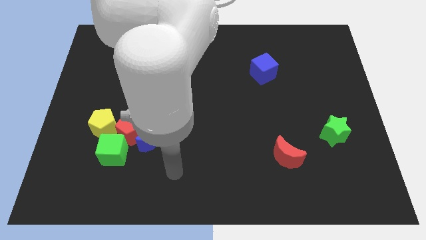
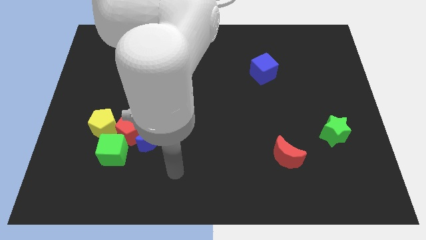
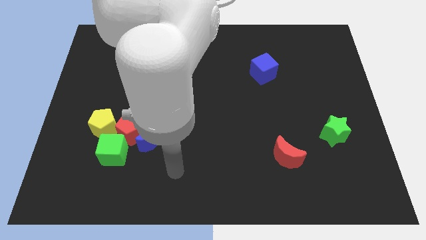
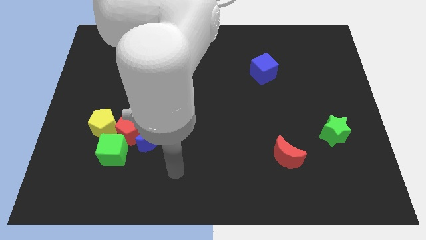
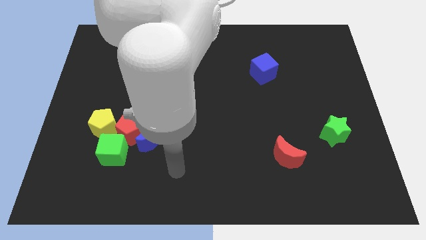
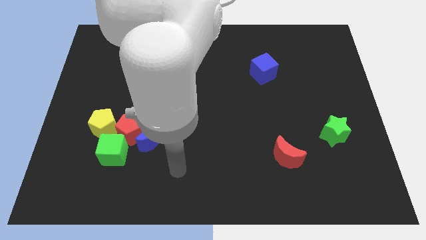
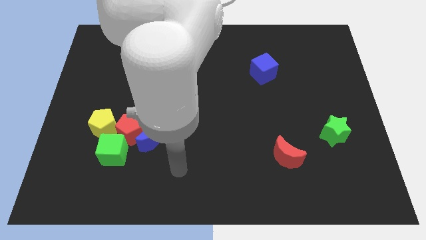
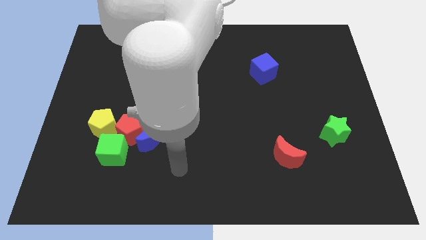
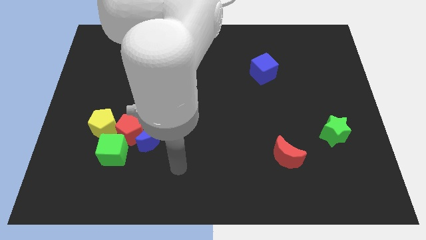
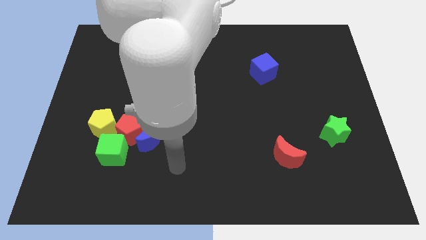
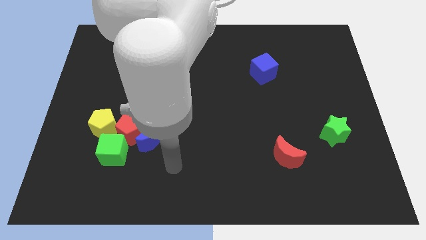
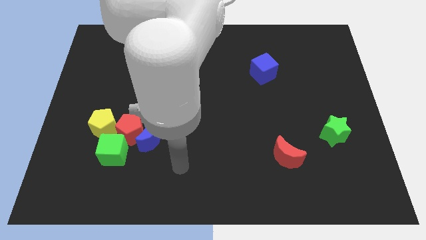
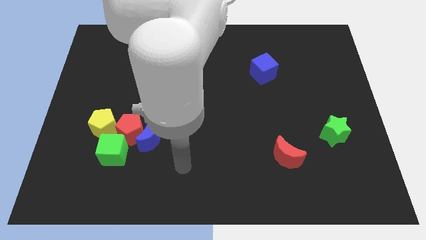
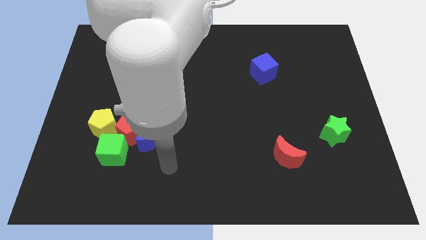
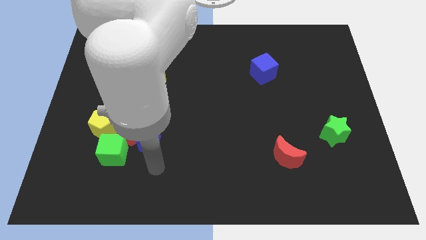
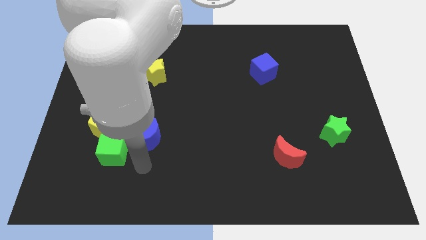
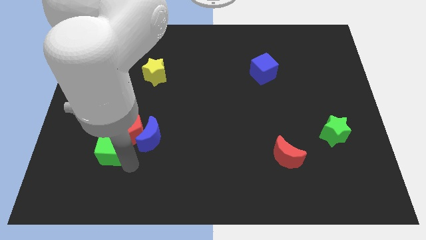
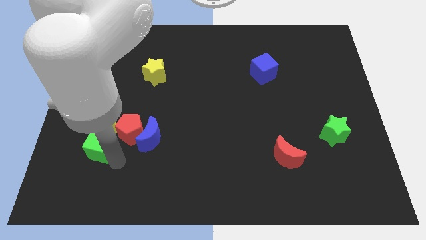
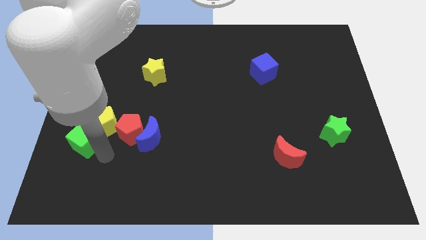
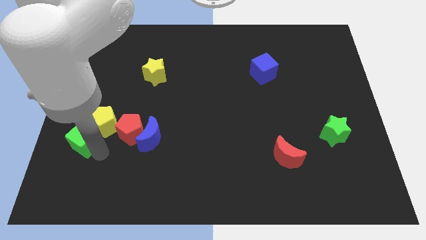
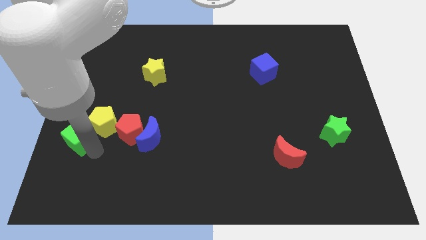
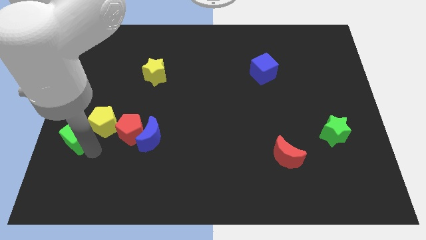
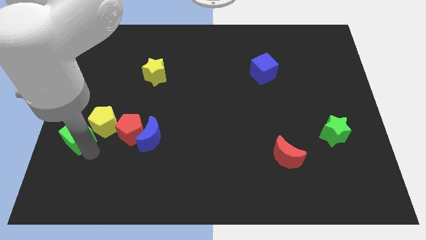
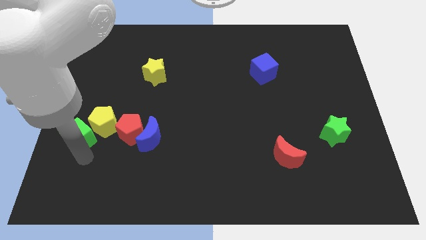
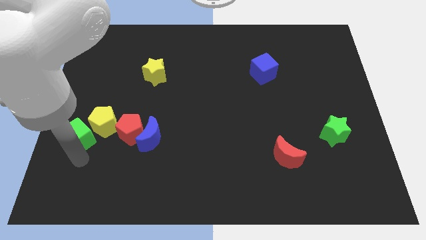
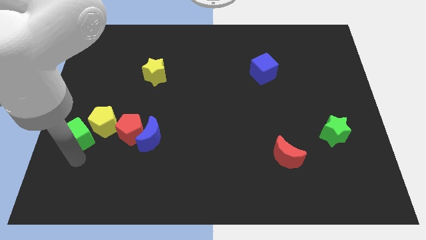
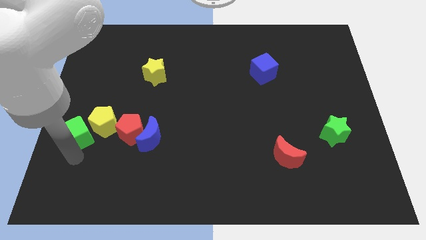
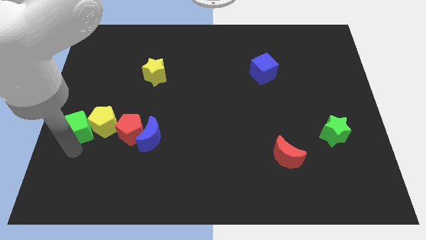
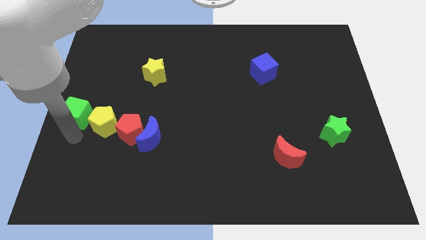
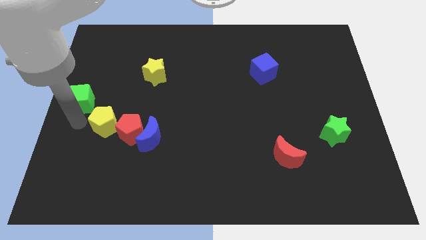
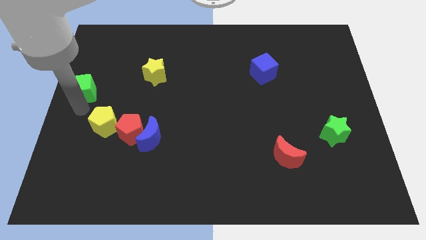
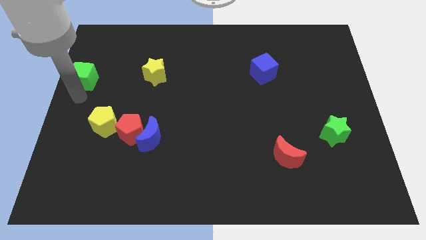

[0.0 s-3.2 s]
move green cube to the bottom left of yellow star

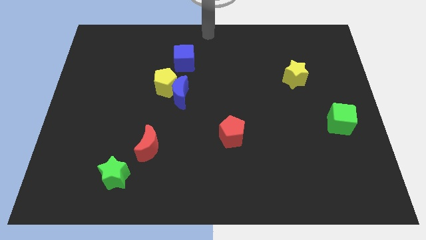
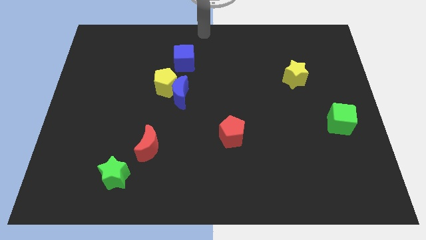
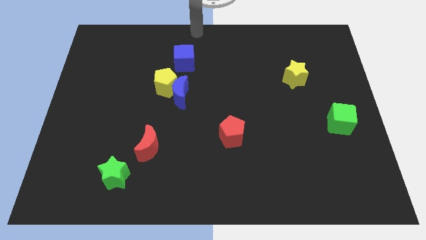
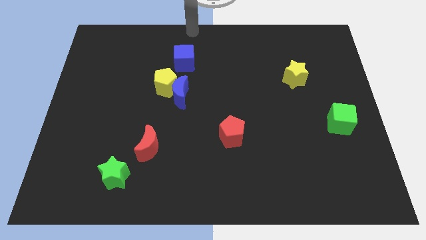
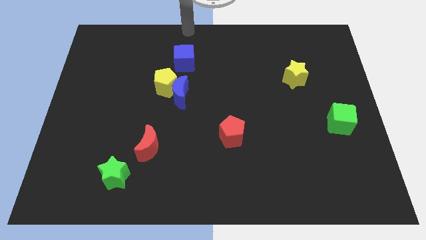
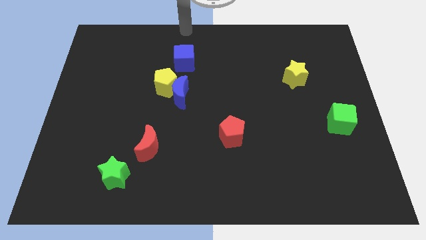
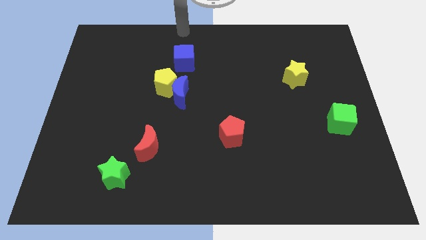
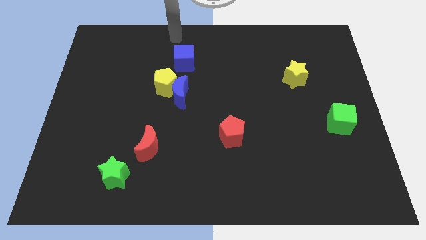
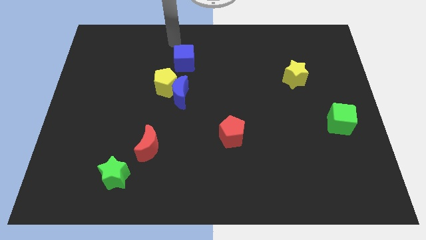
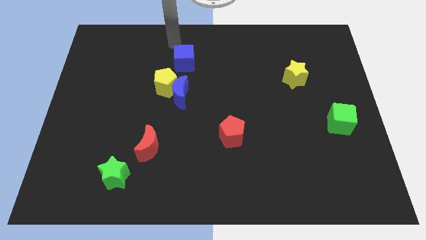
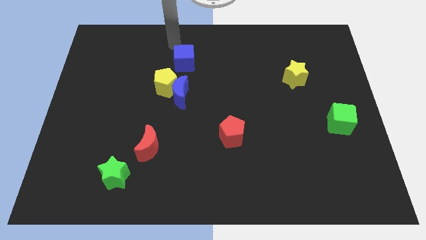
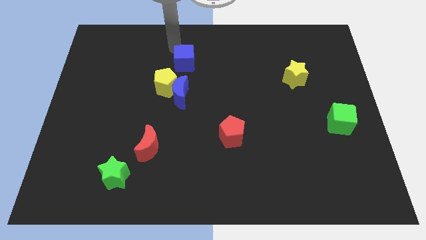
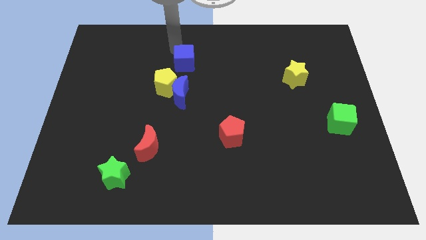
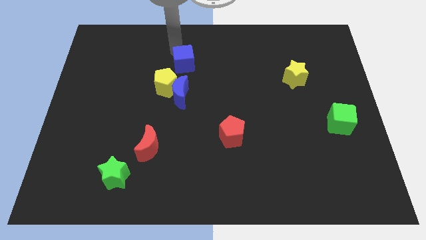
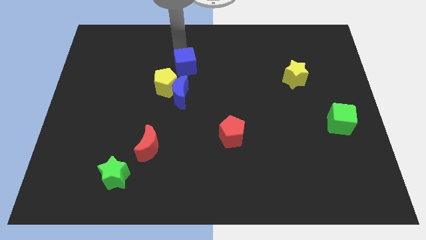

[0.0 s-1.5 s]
tap on the top of blue cube
